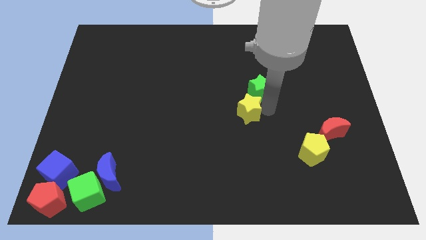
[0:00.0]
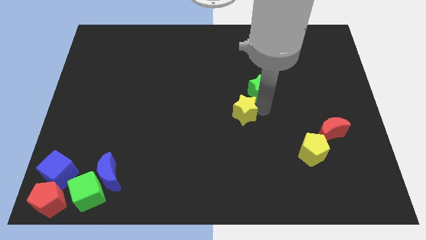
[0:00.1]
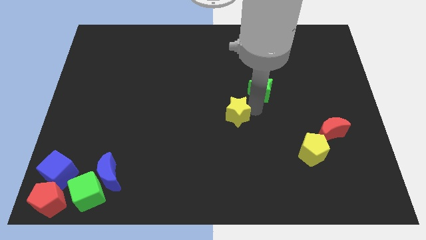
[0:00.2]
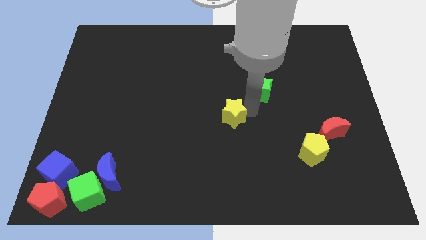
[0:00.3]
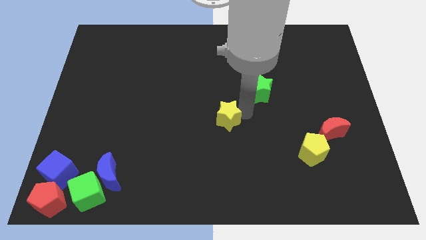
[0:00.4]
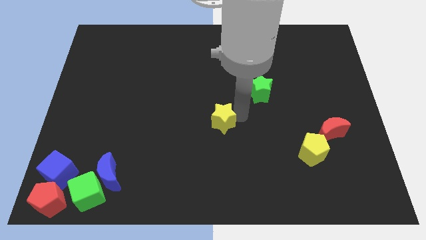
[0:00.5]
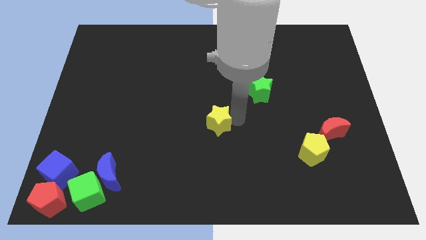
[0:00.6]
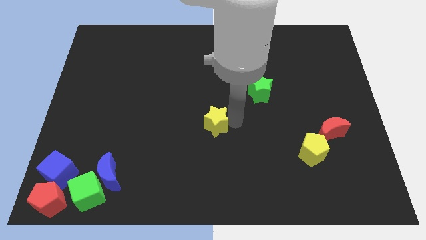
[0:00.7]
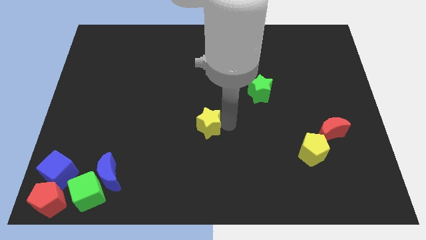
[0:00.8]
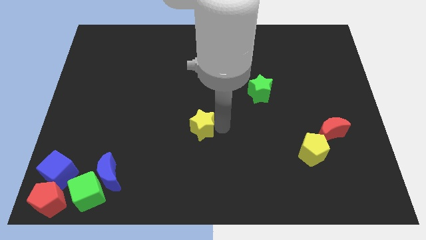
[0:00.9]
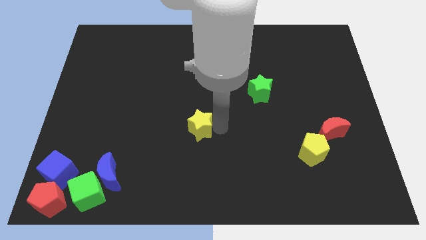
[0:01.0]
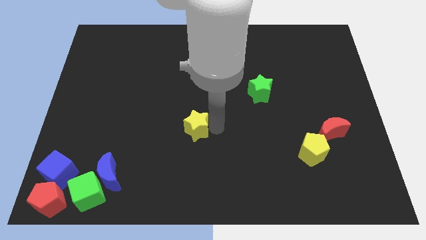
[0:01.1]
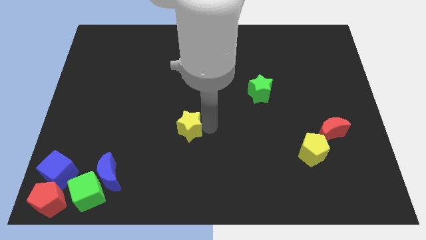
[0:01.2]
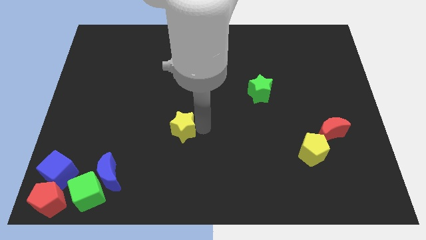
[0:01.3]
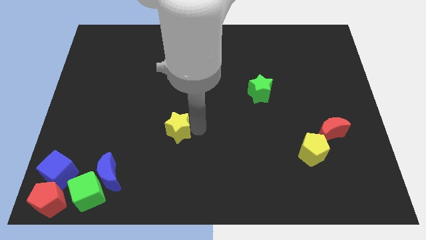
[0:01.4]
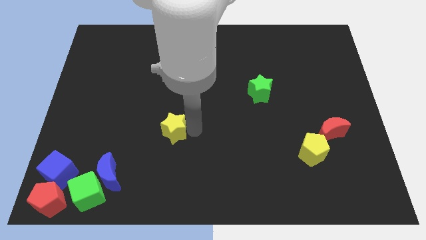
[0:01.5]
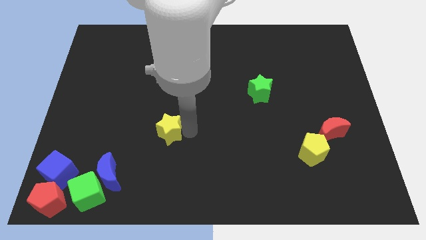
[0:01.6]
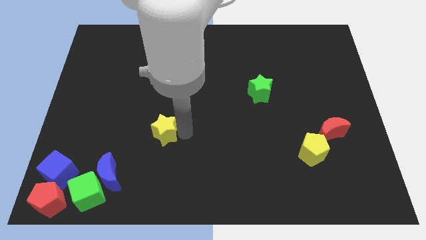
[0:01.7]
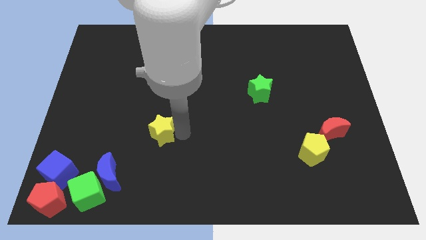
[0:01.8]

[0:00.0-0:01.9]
separate the yellow star and move slightly to the left

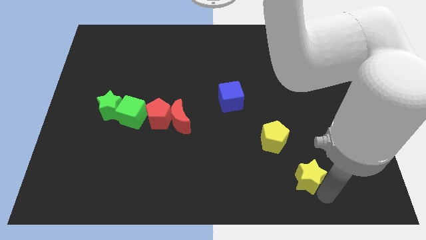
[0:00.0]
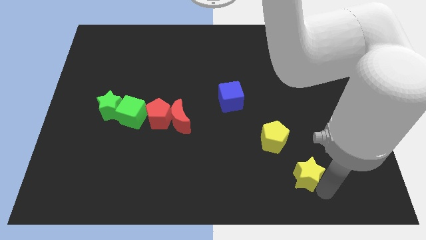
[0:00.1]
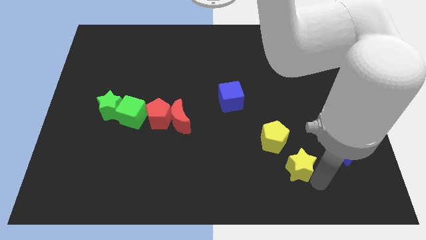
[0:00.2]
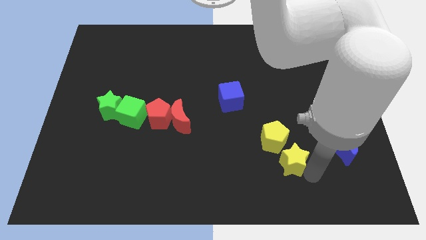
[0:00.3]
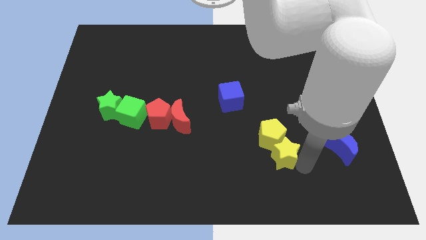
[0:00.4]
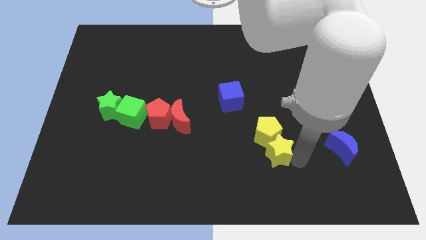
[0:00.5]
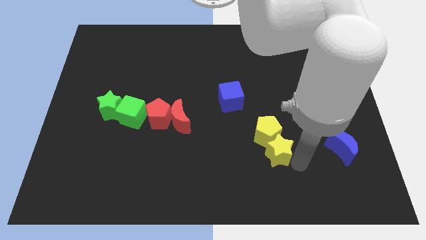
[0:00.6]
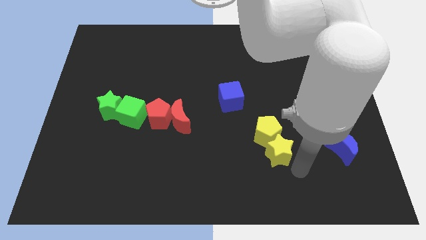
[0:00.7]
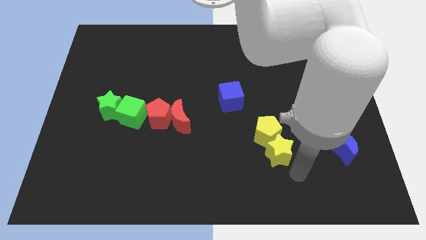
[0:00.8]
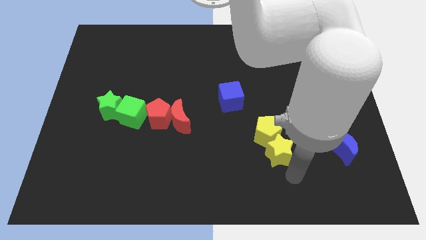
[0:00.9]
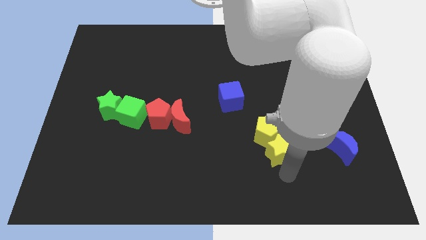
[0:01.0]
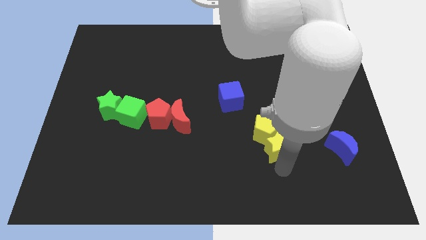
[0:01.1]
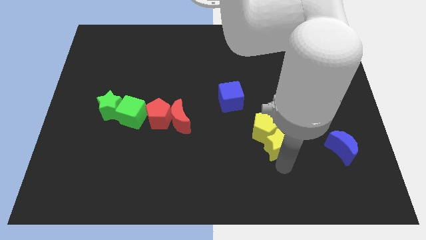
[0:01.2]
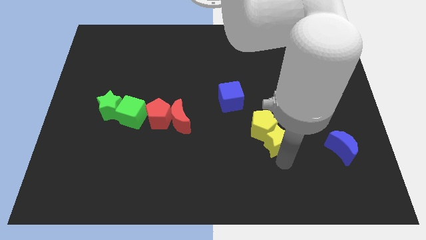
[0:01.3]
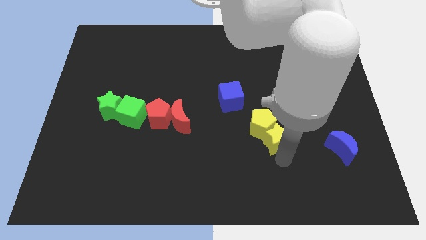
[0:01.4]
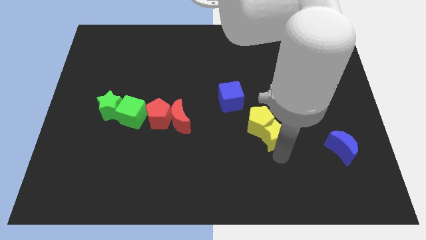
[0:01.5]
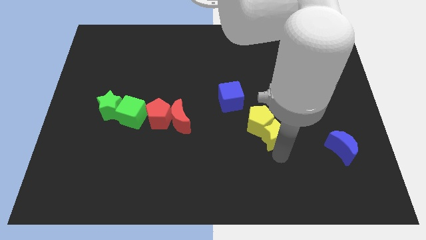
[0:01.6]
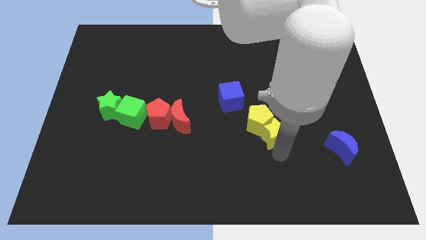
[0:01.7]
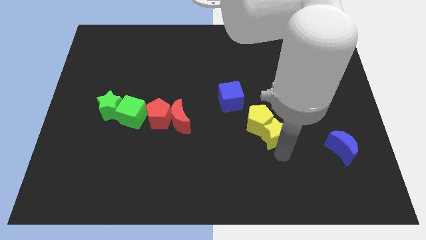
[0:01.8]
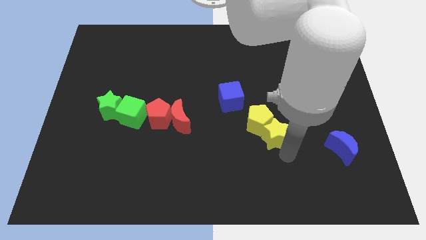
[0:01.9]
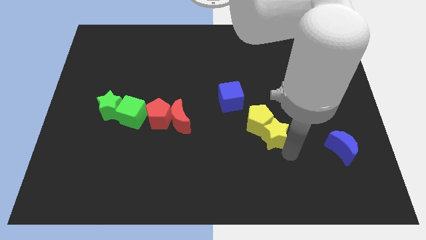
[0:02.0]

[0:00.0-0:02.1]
move the yellow blocks to the bottom right side of blue cube

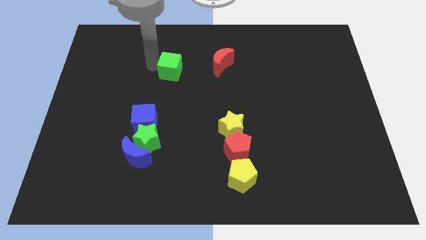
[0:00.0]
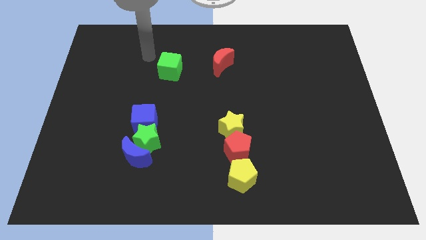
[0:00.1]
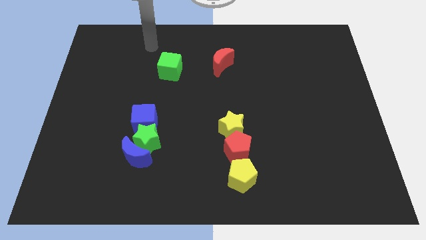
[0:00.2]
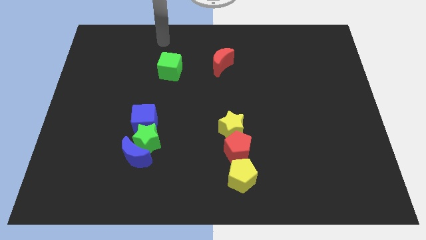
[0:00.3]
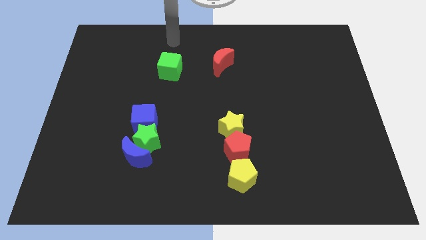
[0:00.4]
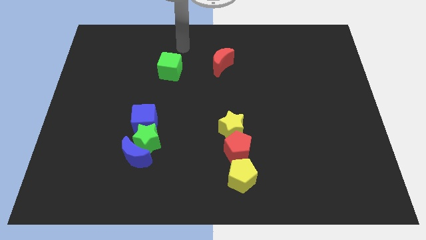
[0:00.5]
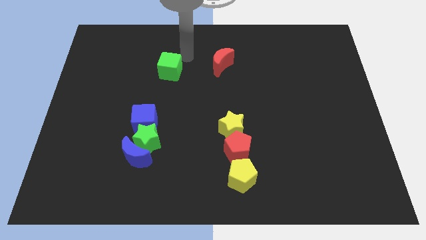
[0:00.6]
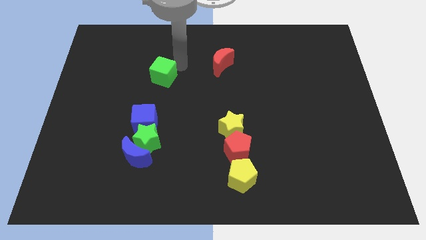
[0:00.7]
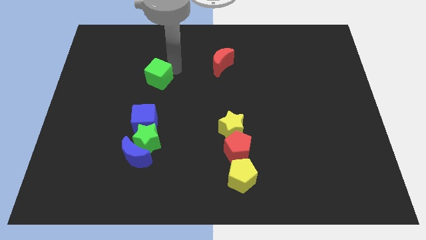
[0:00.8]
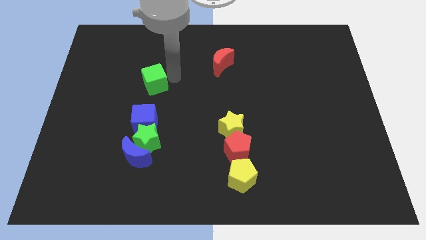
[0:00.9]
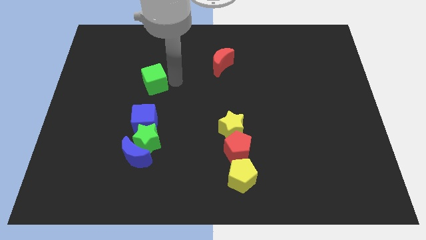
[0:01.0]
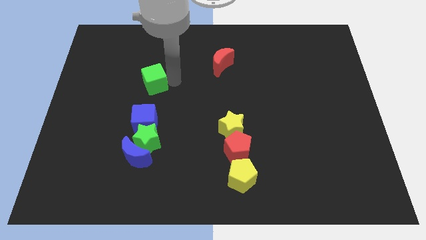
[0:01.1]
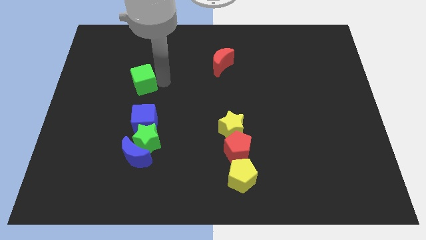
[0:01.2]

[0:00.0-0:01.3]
push the green cube vertically above blue cube

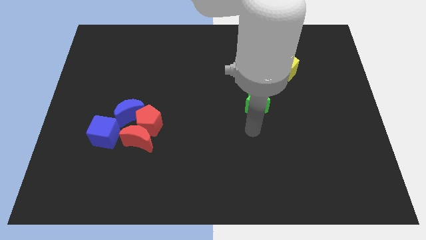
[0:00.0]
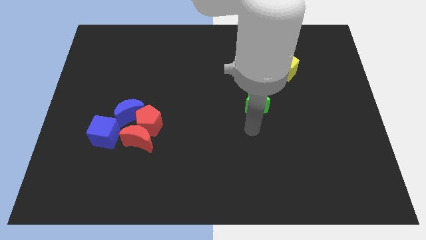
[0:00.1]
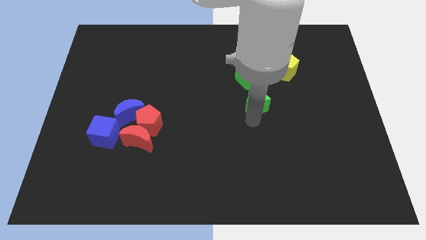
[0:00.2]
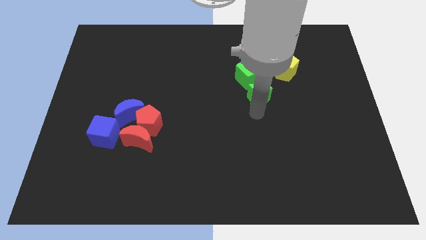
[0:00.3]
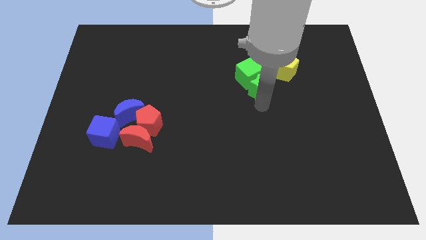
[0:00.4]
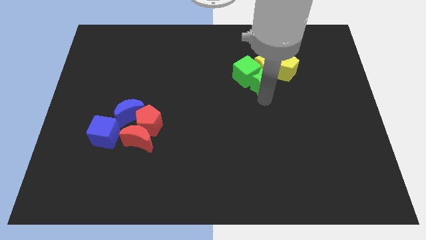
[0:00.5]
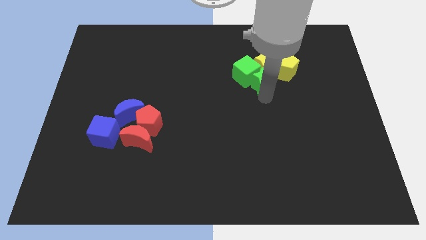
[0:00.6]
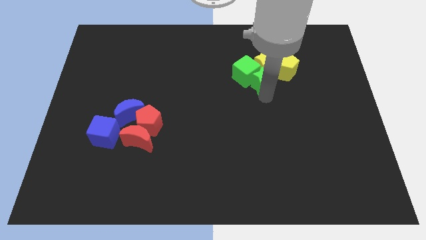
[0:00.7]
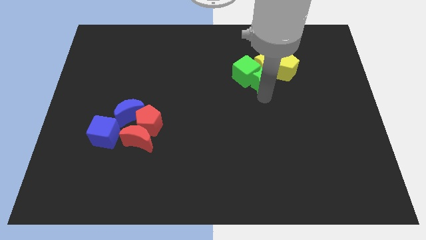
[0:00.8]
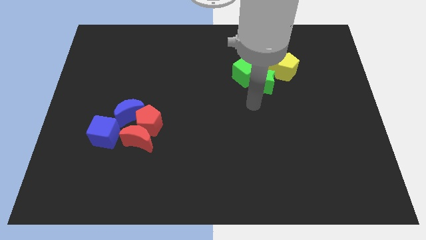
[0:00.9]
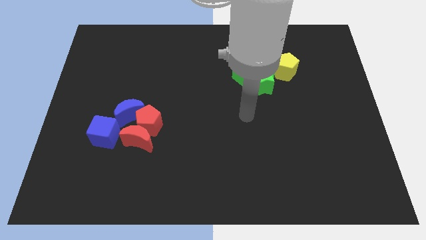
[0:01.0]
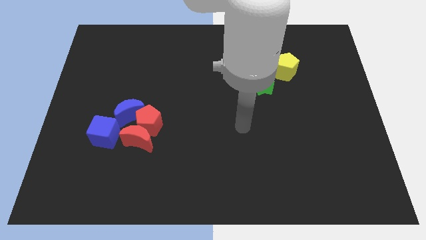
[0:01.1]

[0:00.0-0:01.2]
push the green star into the group of objects

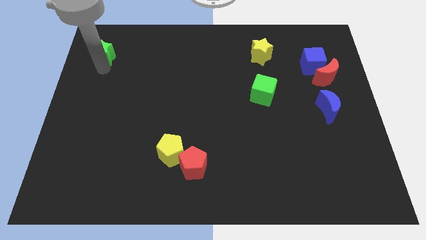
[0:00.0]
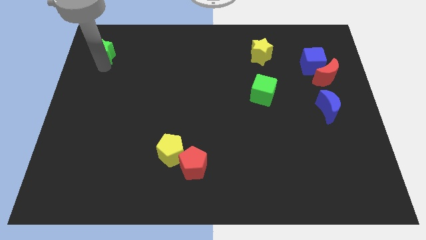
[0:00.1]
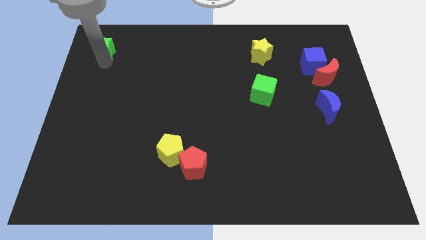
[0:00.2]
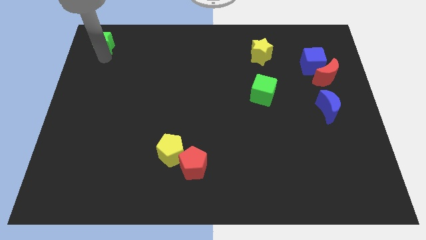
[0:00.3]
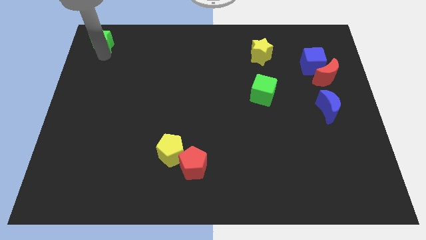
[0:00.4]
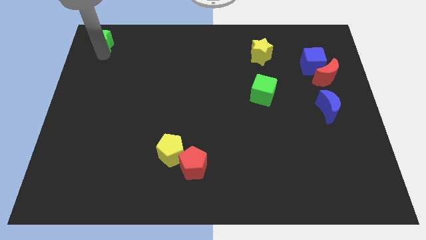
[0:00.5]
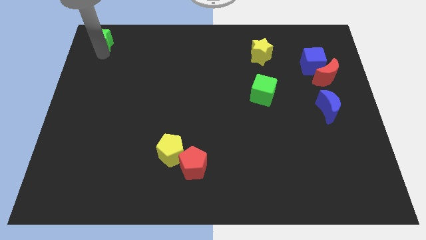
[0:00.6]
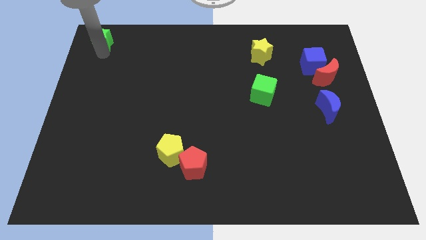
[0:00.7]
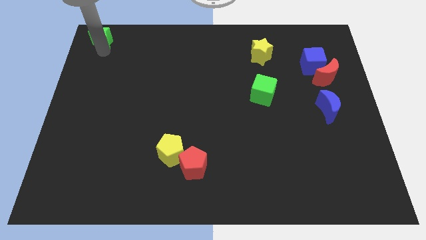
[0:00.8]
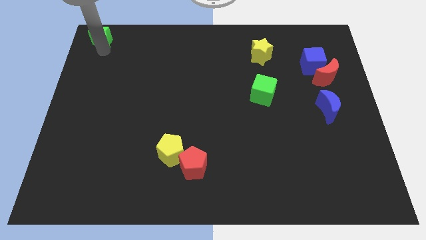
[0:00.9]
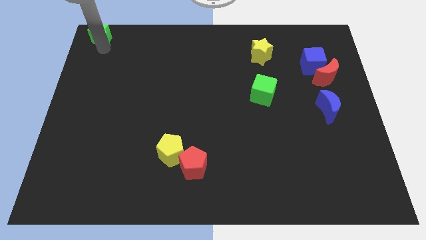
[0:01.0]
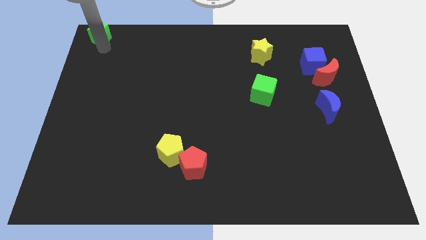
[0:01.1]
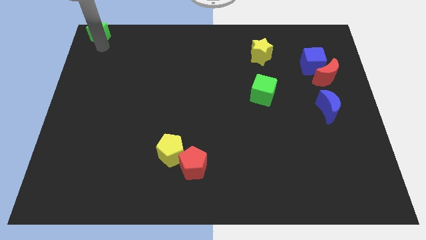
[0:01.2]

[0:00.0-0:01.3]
push green star upwards

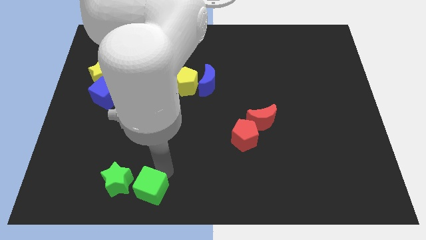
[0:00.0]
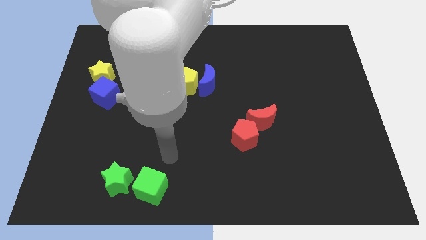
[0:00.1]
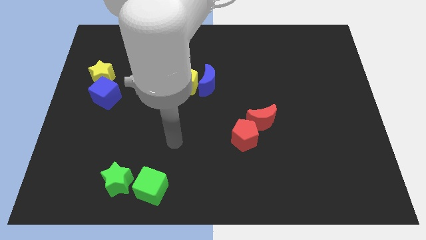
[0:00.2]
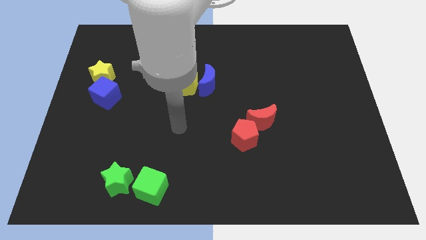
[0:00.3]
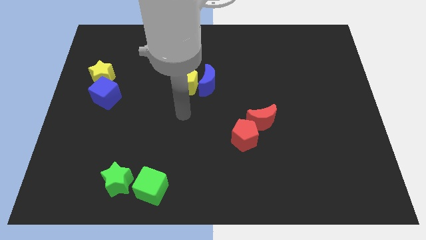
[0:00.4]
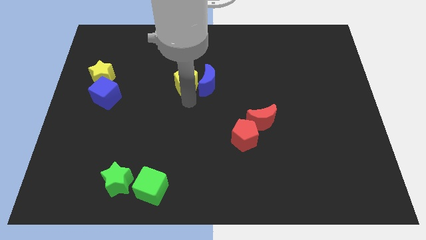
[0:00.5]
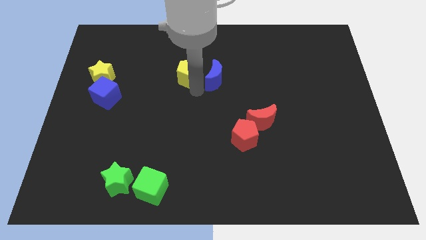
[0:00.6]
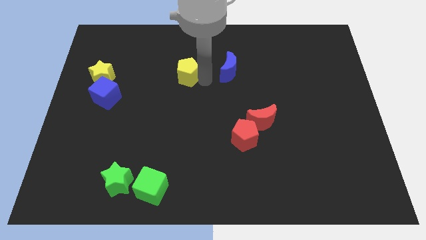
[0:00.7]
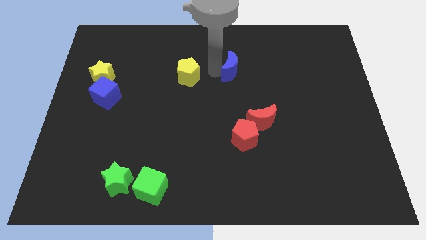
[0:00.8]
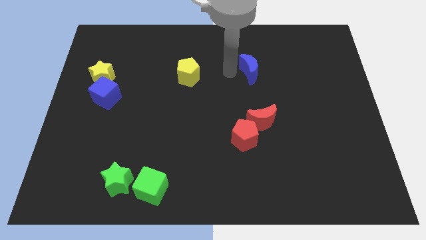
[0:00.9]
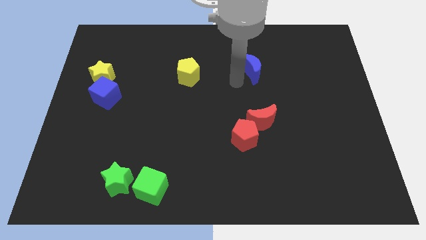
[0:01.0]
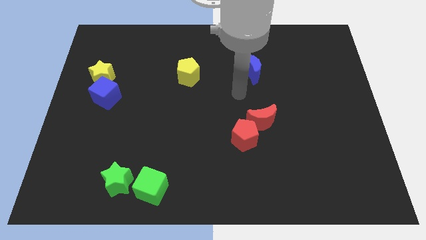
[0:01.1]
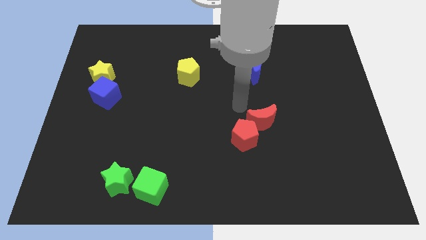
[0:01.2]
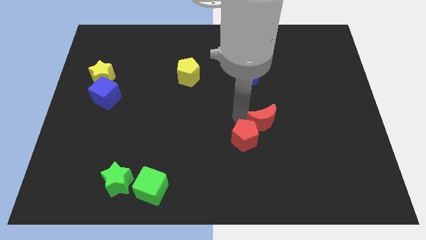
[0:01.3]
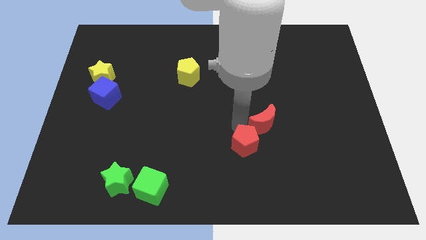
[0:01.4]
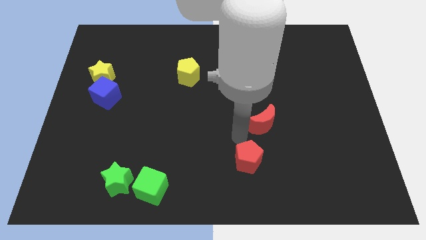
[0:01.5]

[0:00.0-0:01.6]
move your arm away from the green cube
